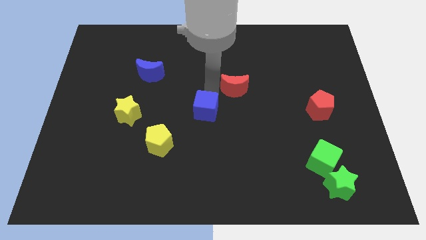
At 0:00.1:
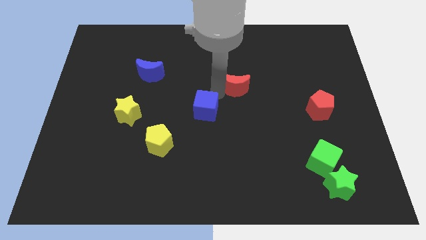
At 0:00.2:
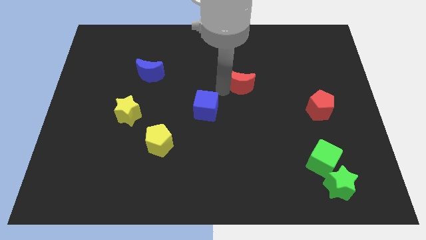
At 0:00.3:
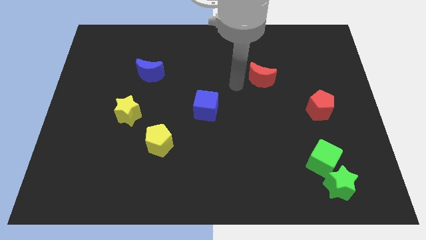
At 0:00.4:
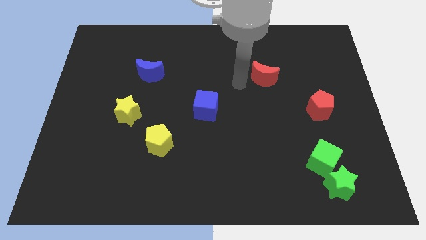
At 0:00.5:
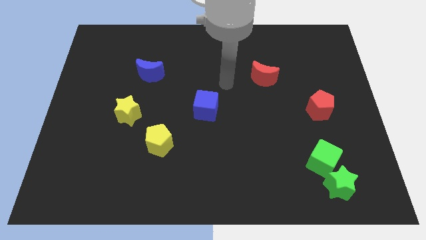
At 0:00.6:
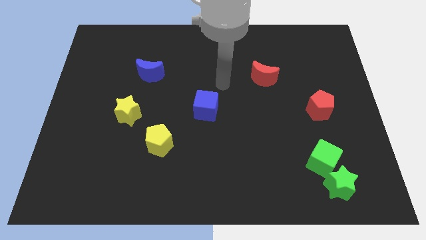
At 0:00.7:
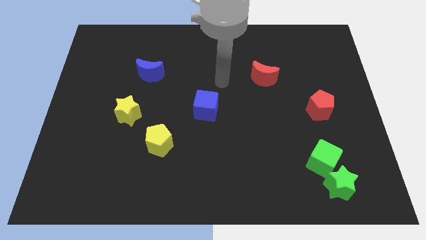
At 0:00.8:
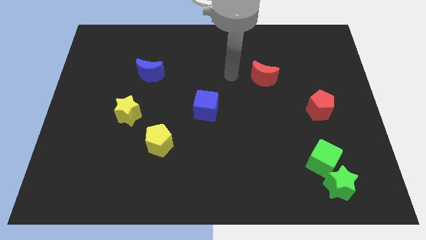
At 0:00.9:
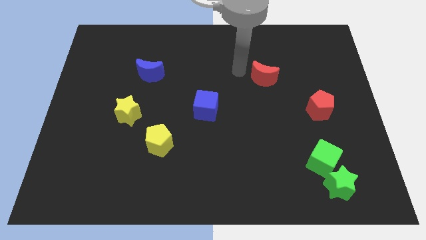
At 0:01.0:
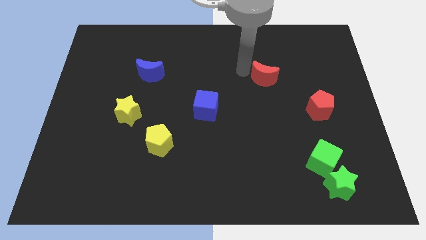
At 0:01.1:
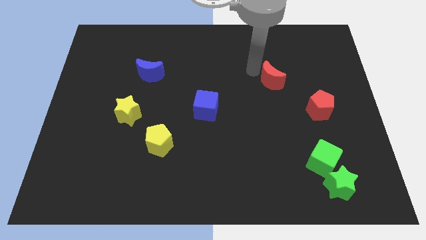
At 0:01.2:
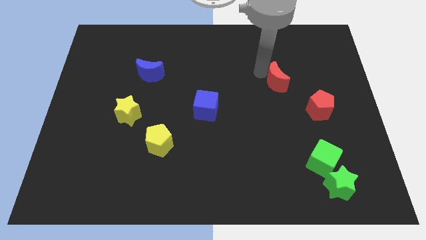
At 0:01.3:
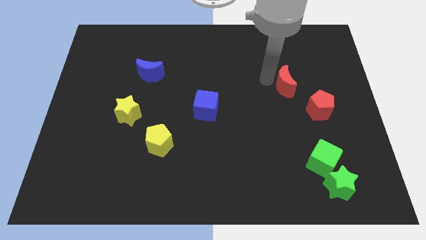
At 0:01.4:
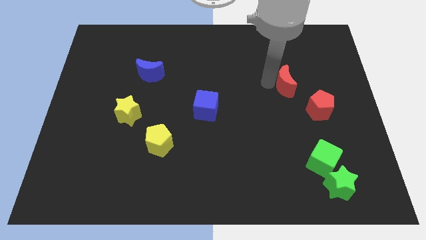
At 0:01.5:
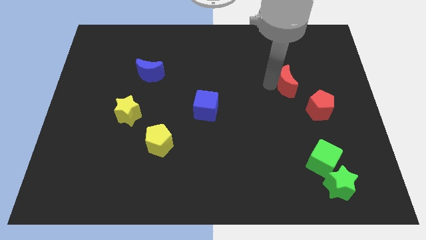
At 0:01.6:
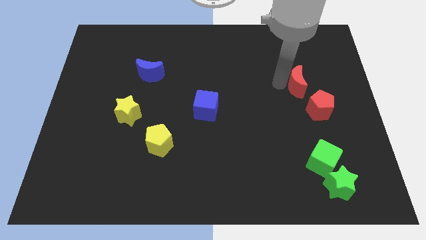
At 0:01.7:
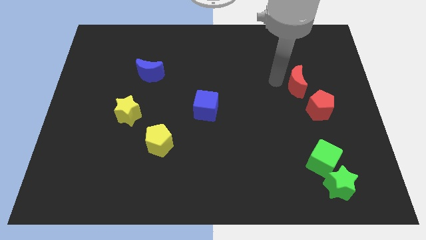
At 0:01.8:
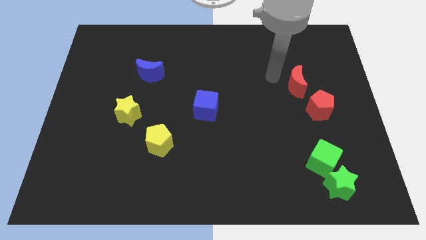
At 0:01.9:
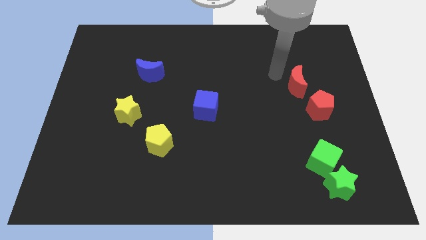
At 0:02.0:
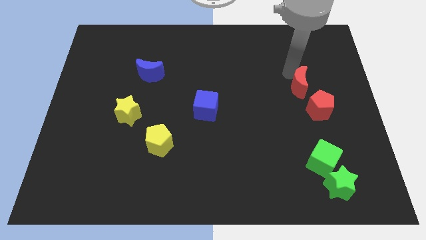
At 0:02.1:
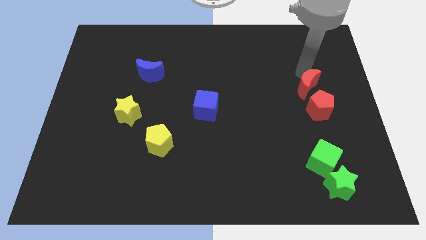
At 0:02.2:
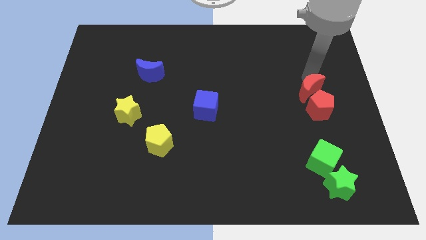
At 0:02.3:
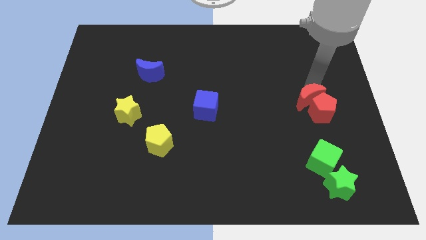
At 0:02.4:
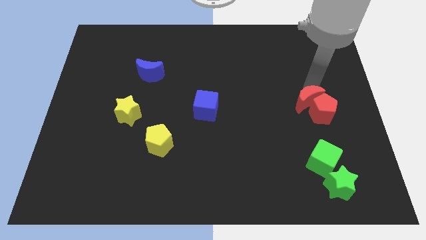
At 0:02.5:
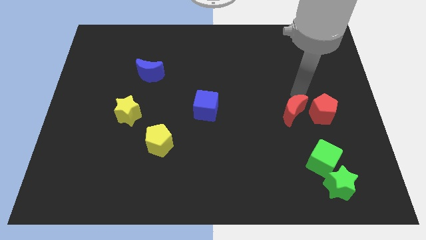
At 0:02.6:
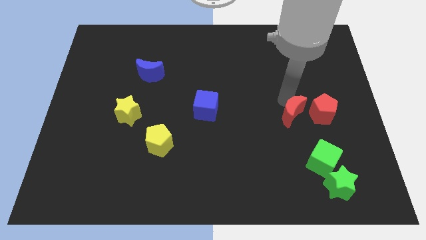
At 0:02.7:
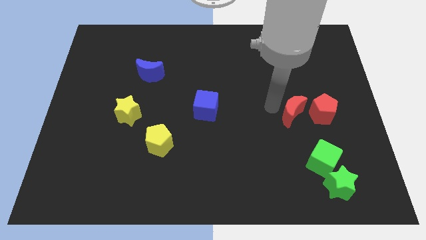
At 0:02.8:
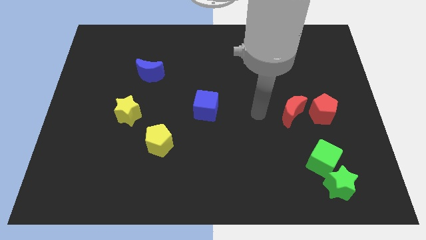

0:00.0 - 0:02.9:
place the red crescent left to the red pentagon

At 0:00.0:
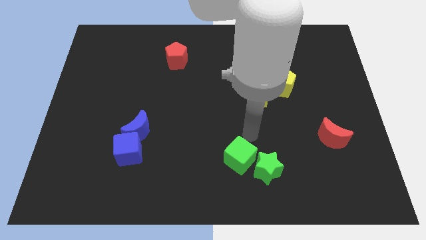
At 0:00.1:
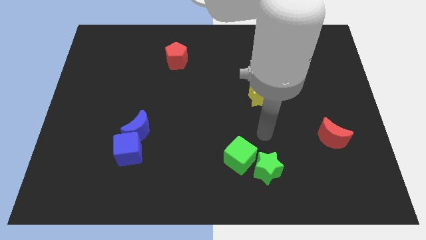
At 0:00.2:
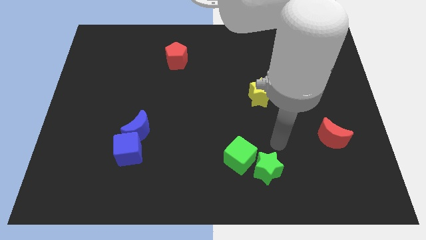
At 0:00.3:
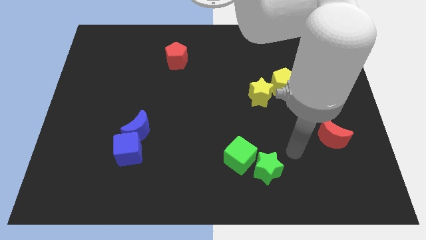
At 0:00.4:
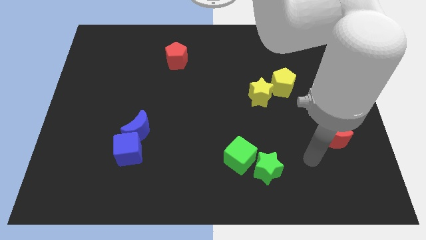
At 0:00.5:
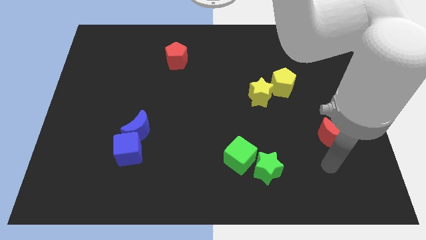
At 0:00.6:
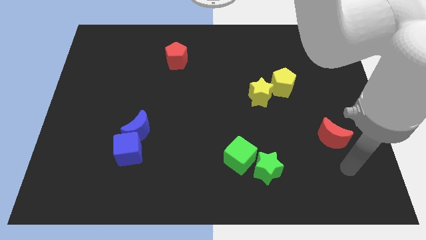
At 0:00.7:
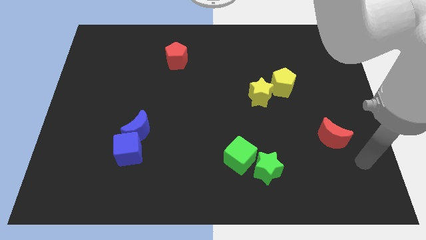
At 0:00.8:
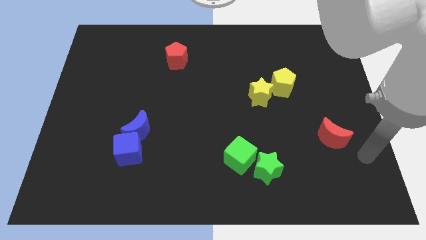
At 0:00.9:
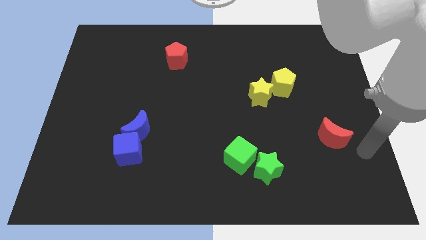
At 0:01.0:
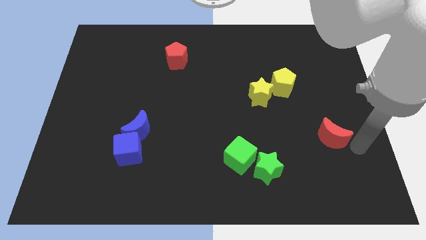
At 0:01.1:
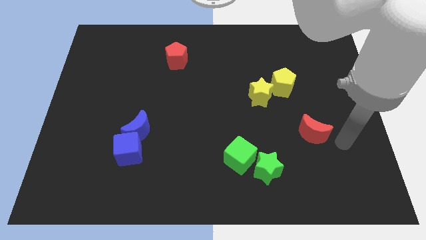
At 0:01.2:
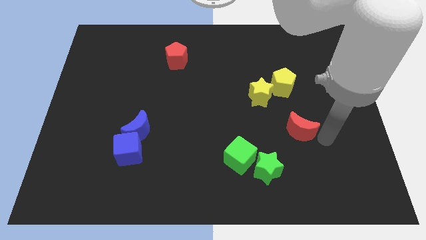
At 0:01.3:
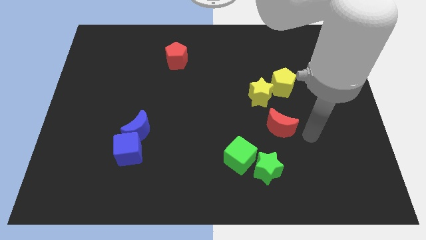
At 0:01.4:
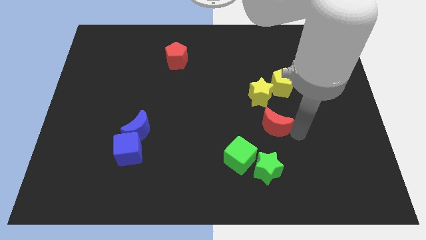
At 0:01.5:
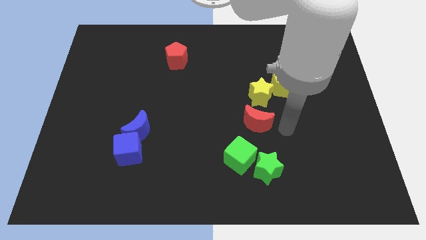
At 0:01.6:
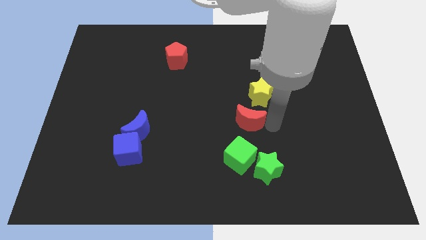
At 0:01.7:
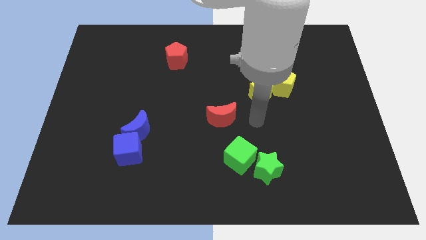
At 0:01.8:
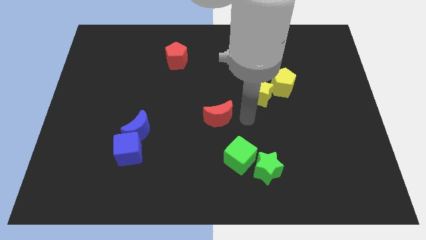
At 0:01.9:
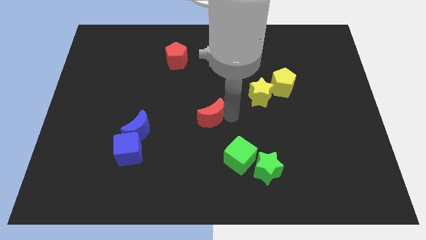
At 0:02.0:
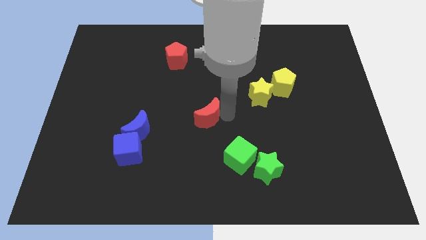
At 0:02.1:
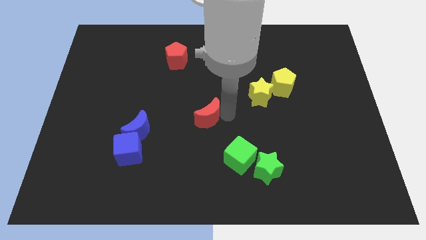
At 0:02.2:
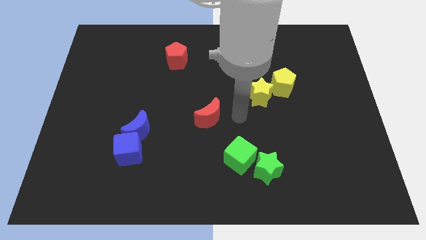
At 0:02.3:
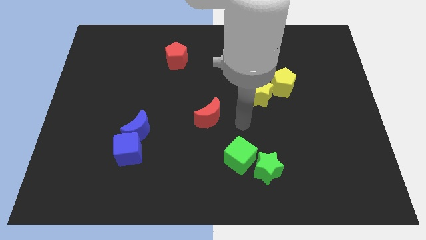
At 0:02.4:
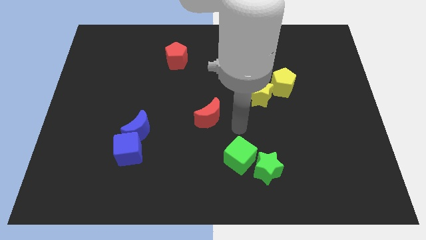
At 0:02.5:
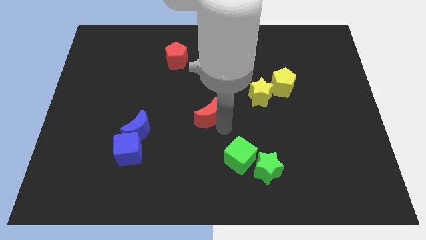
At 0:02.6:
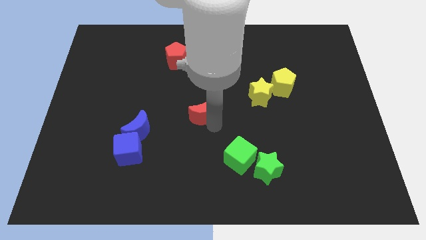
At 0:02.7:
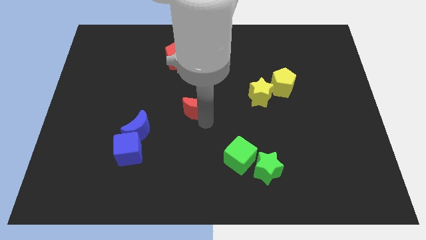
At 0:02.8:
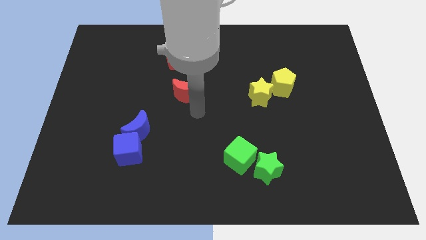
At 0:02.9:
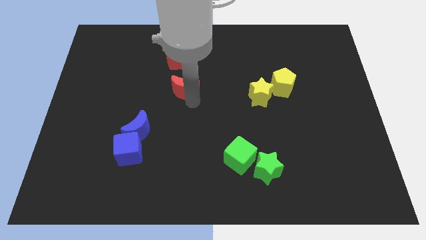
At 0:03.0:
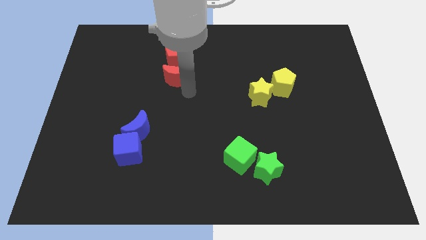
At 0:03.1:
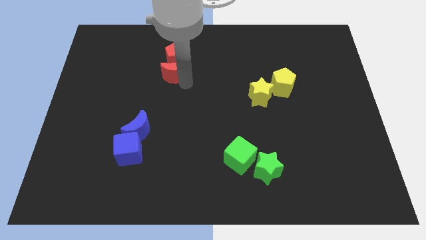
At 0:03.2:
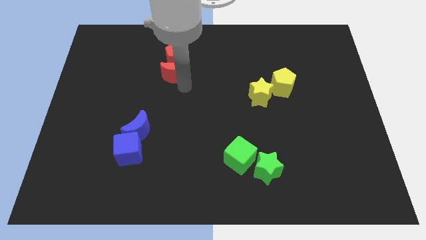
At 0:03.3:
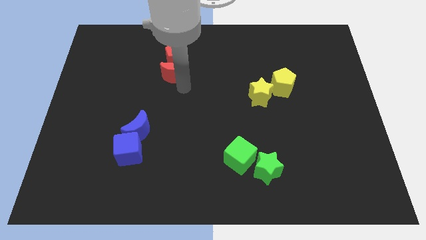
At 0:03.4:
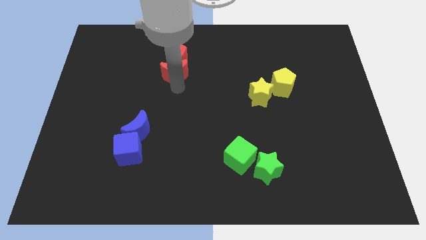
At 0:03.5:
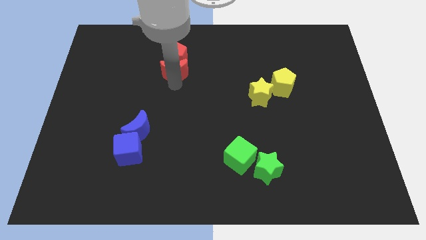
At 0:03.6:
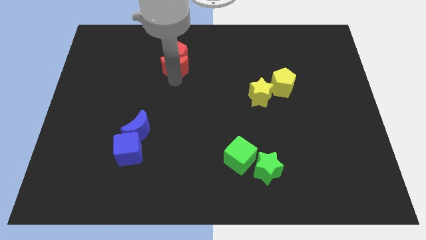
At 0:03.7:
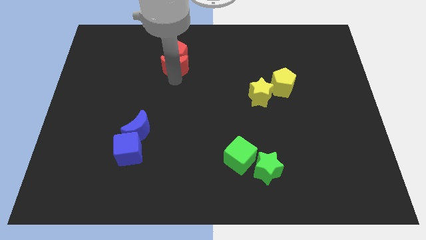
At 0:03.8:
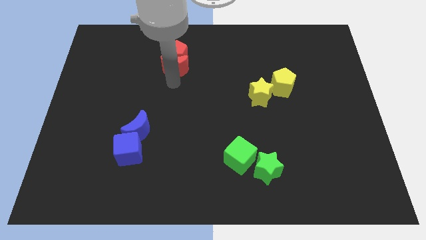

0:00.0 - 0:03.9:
push the red moon into the red pentagon

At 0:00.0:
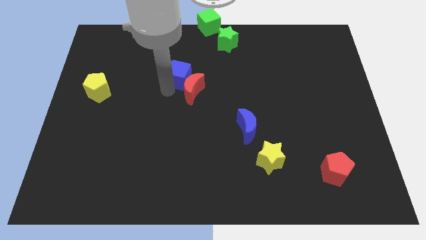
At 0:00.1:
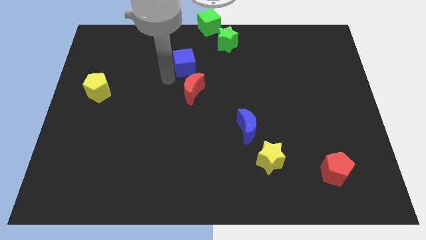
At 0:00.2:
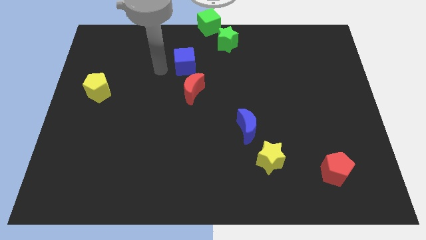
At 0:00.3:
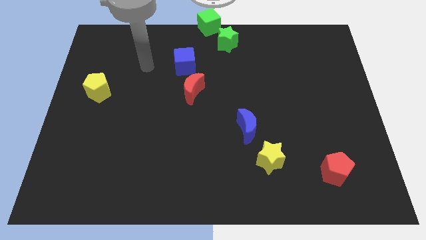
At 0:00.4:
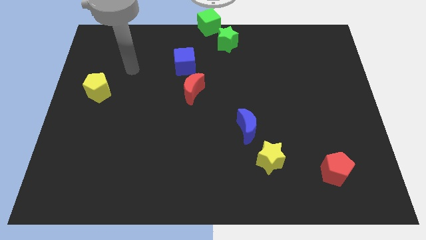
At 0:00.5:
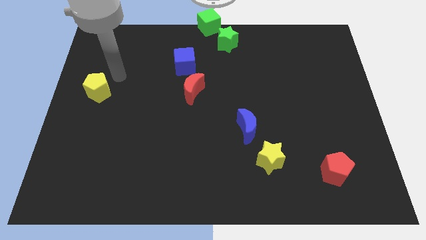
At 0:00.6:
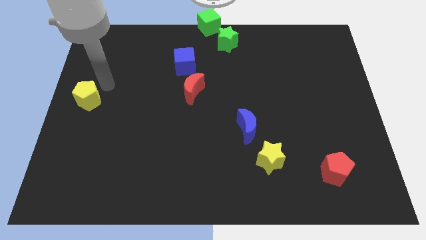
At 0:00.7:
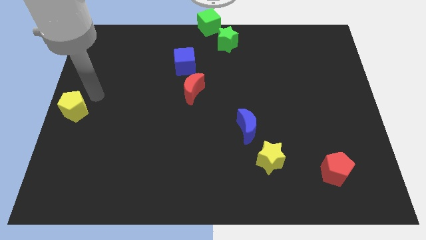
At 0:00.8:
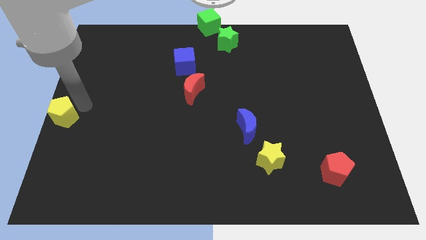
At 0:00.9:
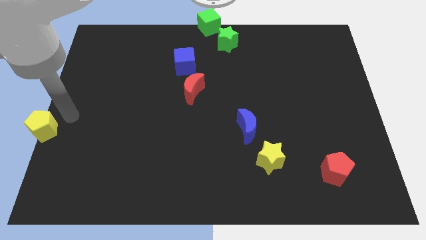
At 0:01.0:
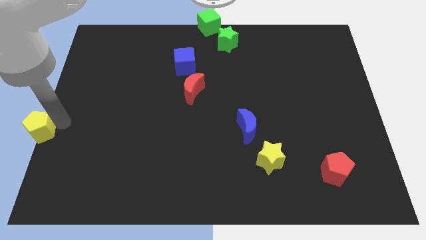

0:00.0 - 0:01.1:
move the yellow pentagon diagonally to the bottom left of the red moon

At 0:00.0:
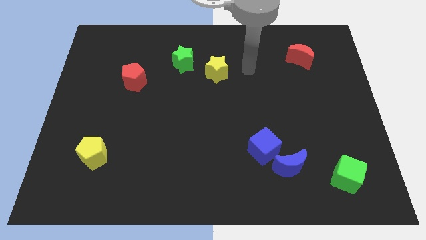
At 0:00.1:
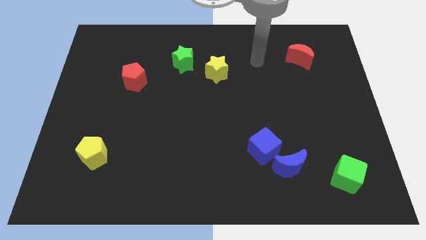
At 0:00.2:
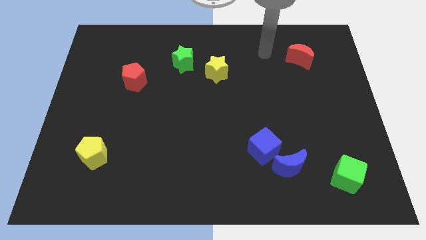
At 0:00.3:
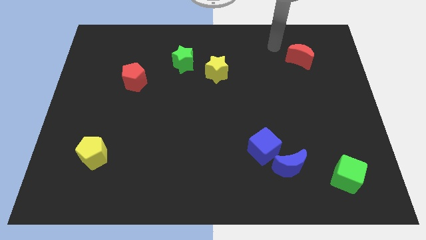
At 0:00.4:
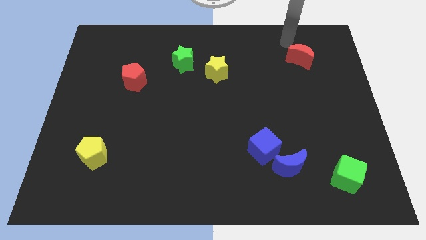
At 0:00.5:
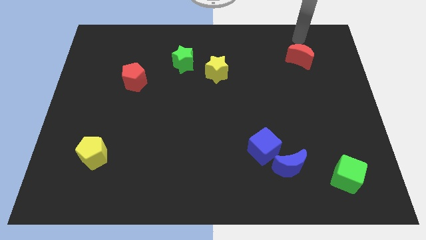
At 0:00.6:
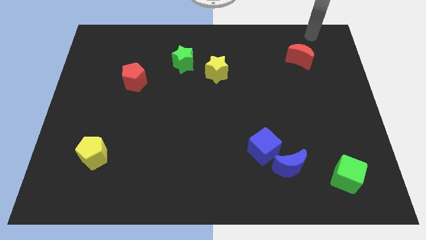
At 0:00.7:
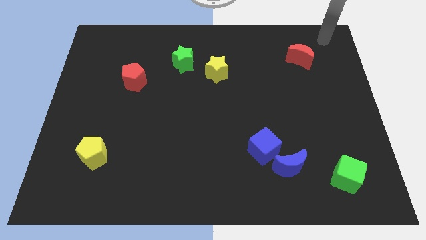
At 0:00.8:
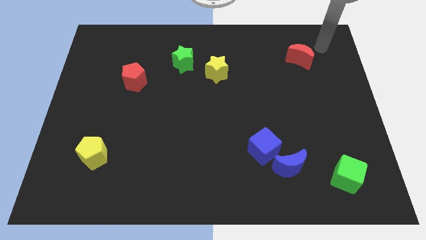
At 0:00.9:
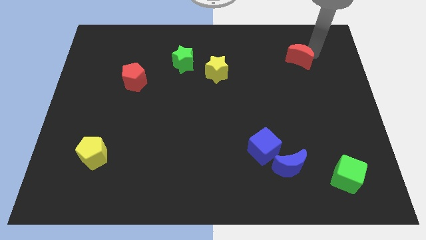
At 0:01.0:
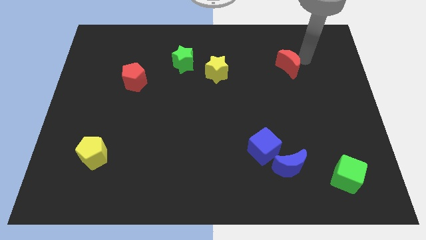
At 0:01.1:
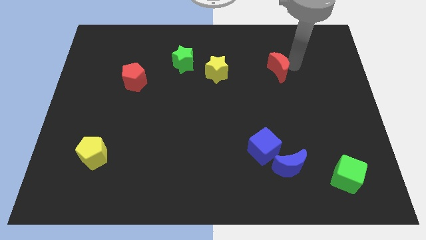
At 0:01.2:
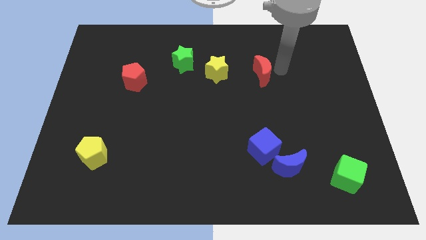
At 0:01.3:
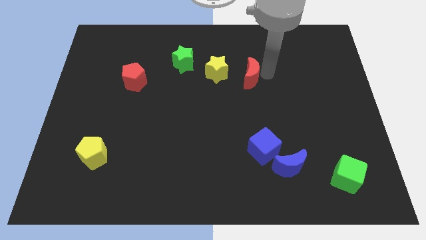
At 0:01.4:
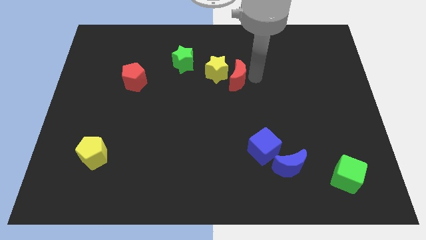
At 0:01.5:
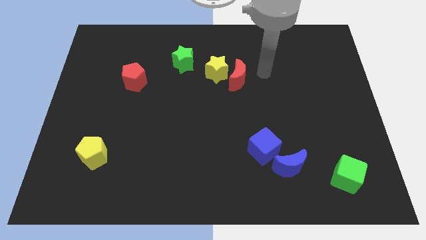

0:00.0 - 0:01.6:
place the red crescent close to the yellow star
